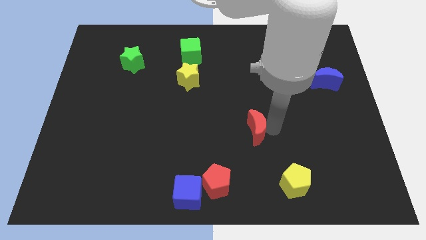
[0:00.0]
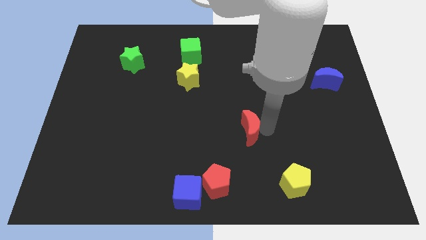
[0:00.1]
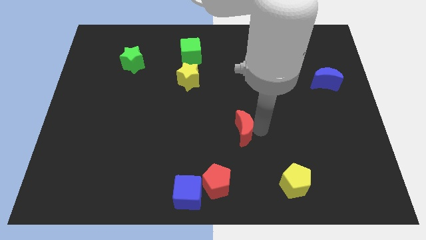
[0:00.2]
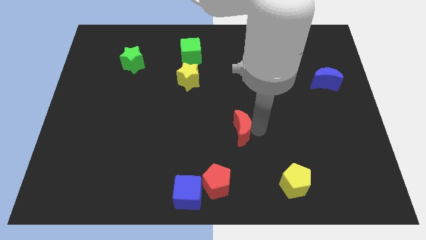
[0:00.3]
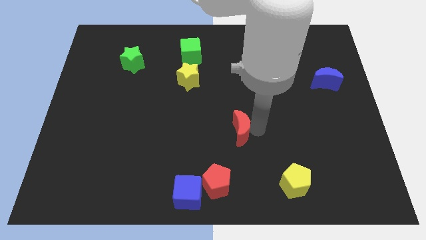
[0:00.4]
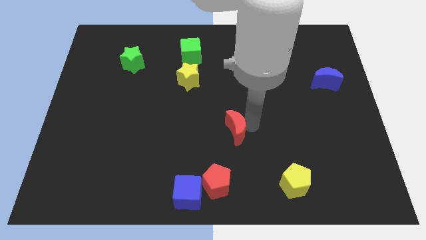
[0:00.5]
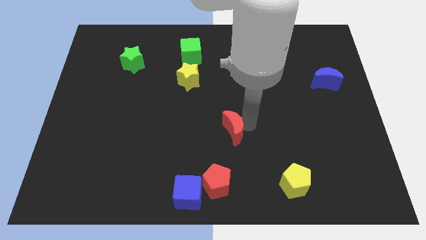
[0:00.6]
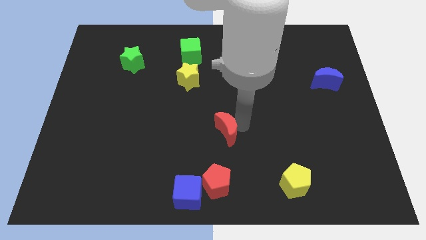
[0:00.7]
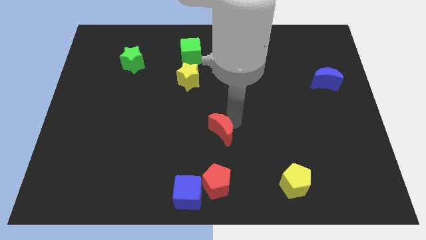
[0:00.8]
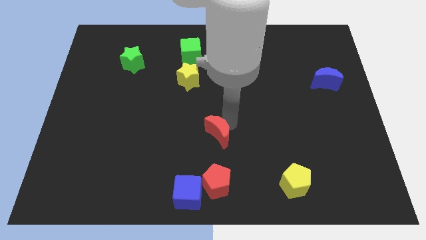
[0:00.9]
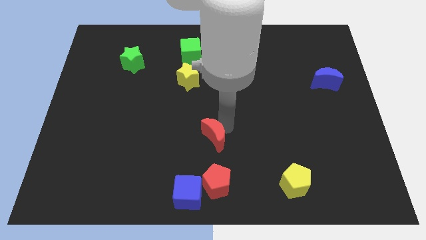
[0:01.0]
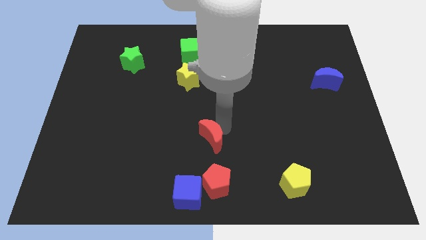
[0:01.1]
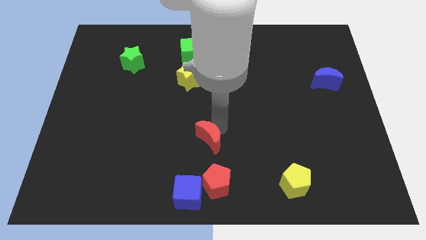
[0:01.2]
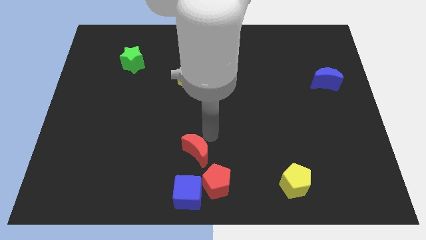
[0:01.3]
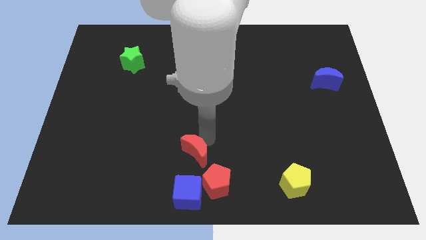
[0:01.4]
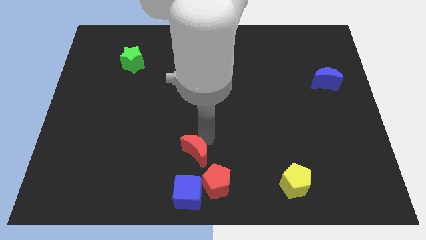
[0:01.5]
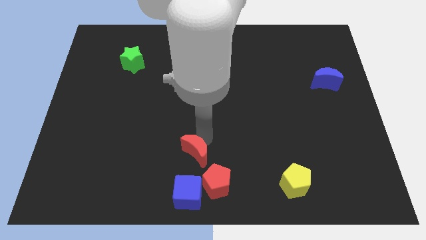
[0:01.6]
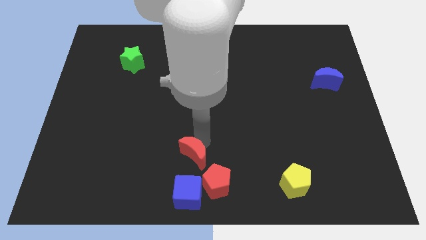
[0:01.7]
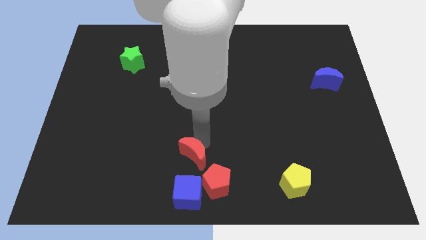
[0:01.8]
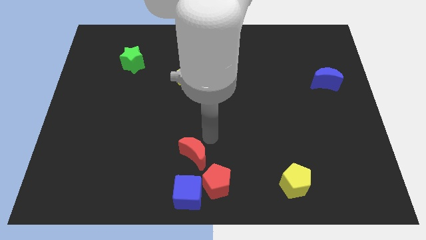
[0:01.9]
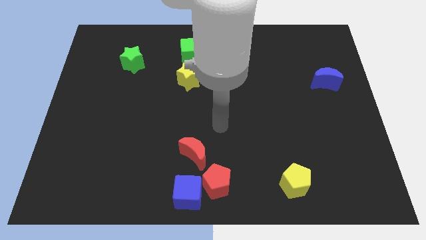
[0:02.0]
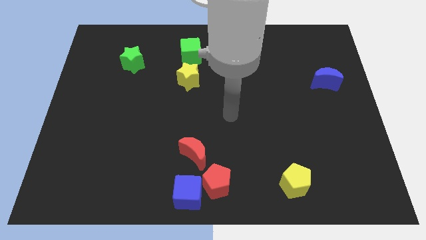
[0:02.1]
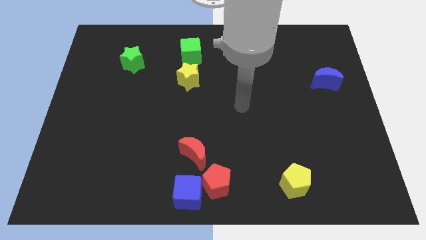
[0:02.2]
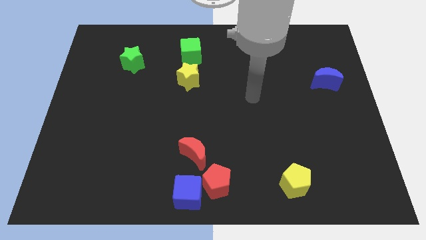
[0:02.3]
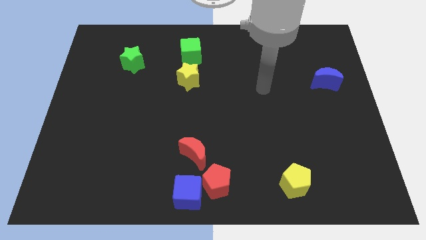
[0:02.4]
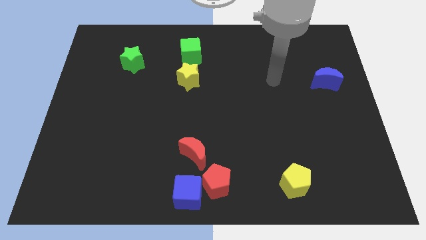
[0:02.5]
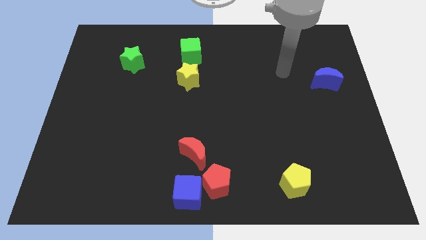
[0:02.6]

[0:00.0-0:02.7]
place the red crescent above the blue cube

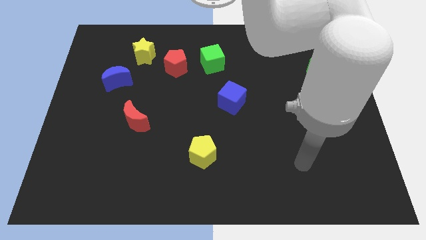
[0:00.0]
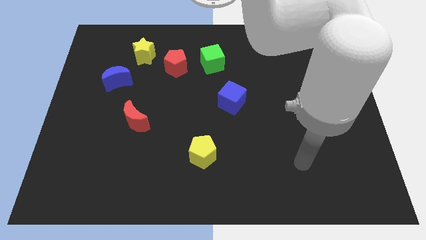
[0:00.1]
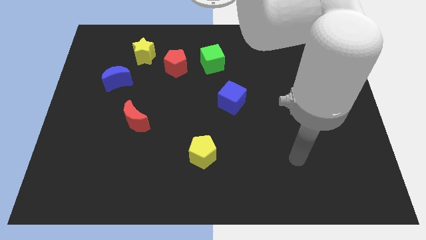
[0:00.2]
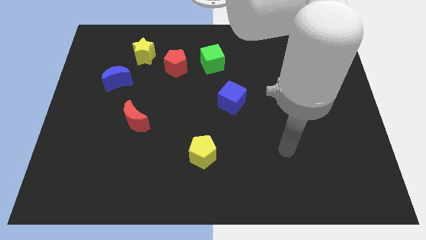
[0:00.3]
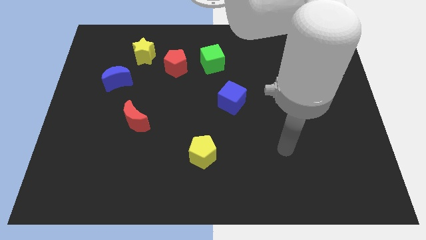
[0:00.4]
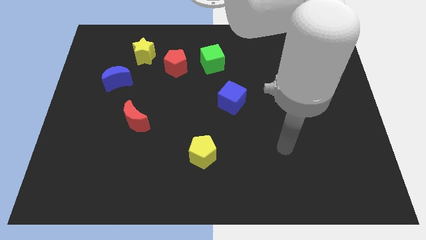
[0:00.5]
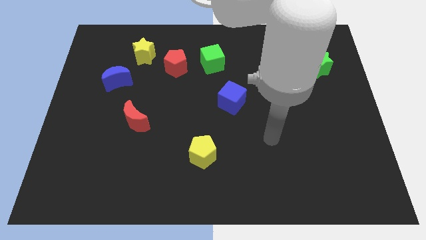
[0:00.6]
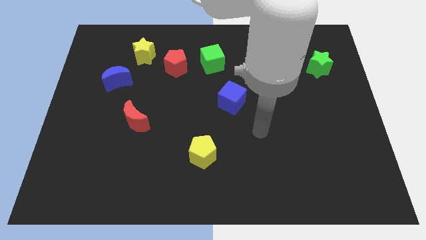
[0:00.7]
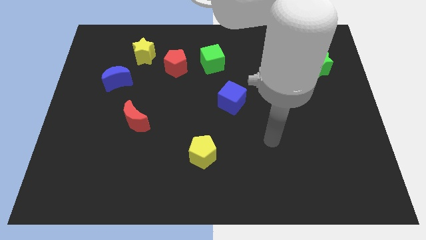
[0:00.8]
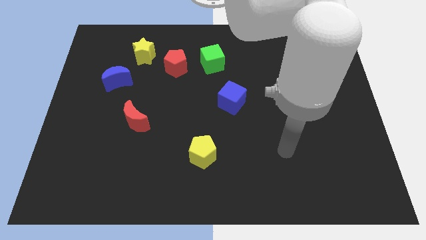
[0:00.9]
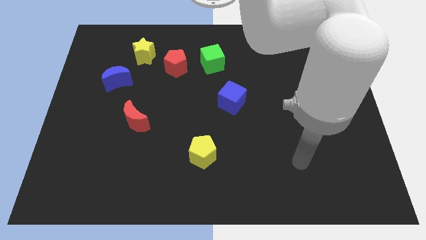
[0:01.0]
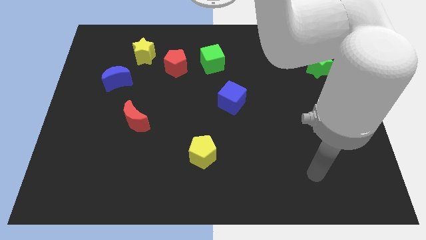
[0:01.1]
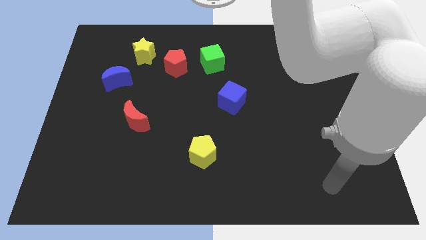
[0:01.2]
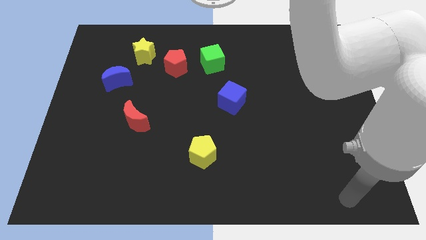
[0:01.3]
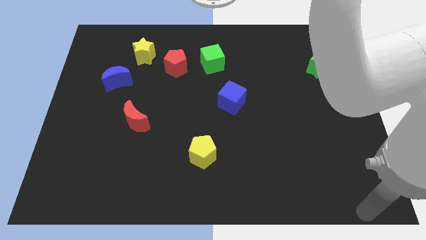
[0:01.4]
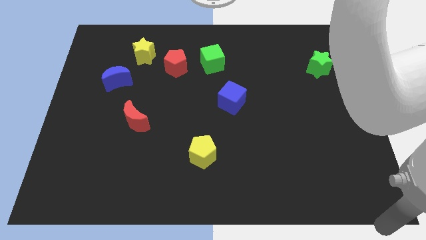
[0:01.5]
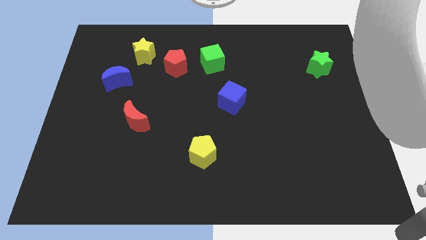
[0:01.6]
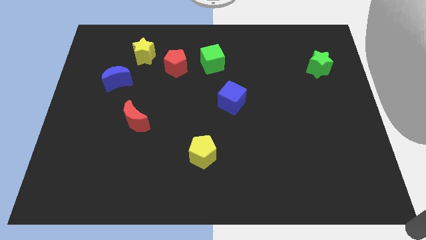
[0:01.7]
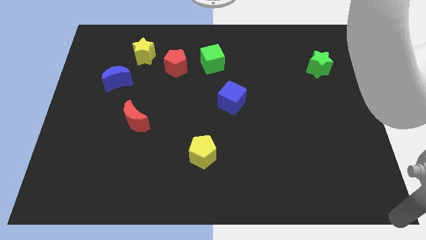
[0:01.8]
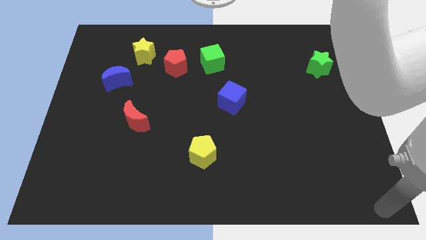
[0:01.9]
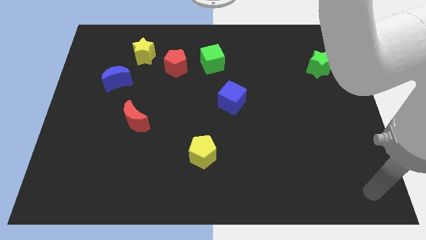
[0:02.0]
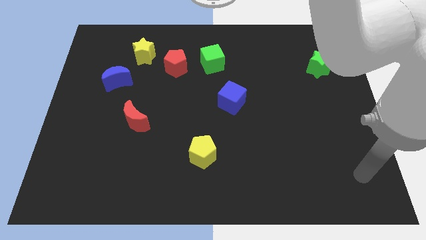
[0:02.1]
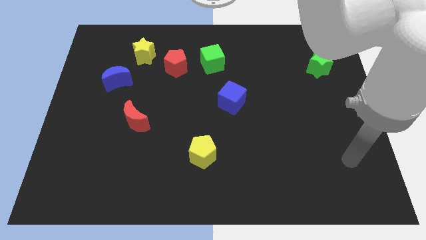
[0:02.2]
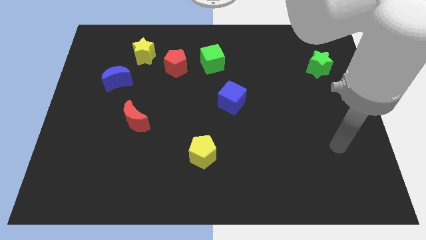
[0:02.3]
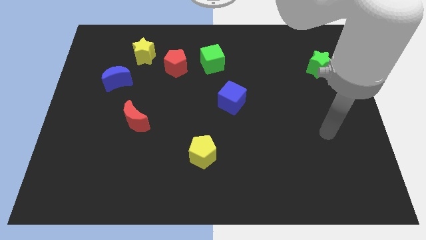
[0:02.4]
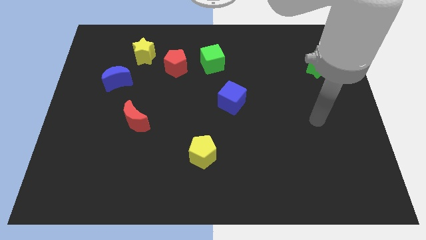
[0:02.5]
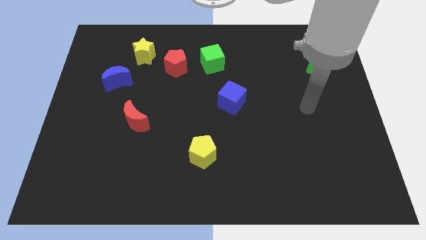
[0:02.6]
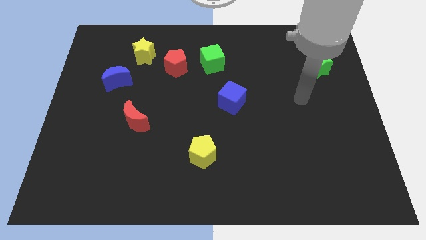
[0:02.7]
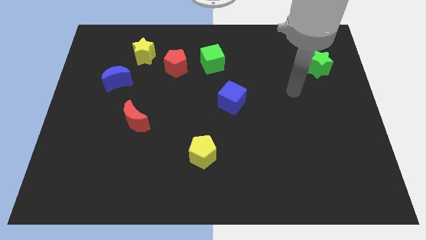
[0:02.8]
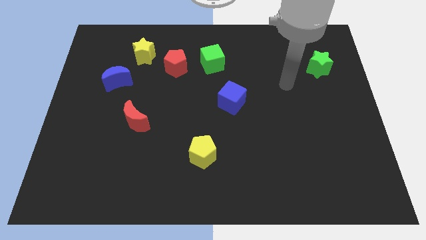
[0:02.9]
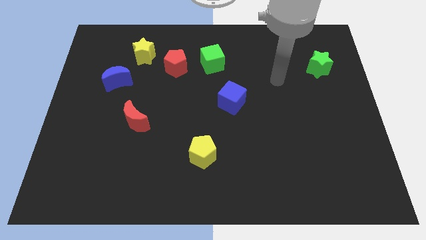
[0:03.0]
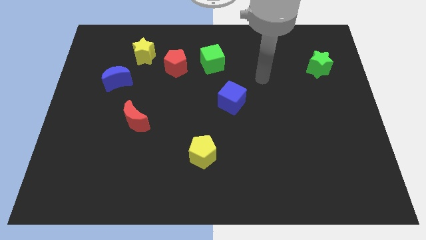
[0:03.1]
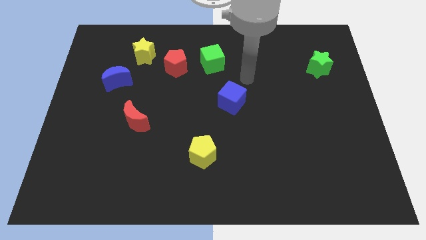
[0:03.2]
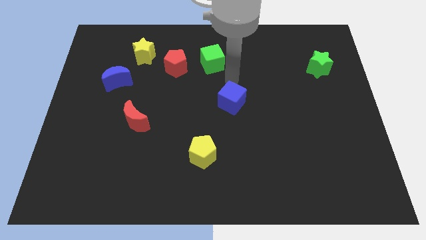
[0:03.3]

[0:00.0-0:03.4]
move your arm to the top side of the blue cube

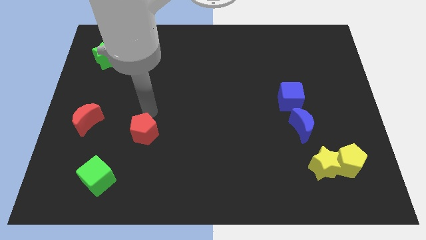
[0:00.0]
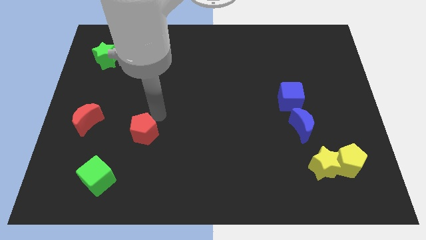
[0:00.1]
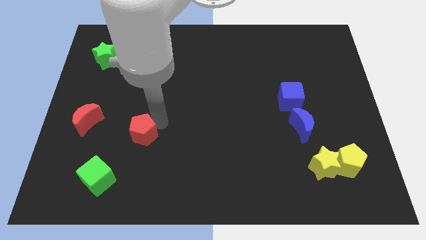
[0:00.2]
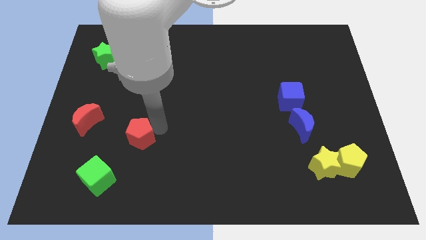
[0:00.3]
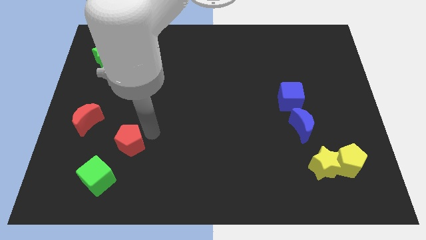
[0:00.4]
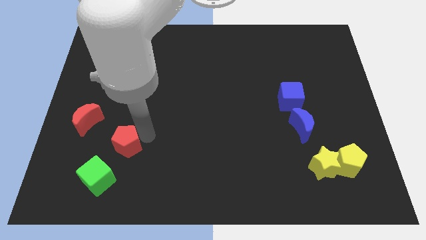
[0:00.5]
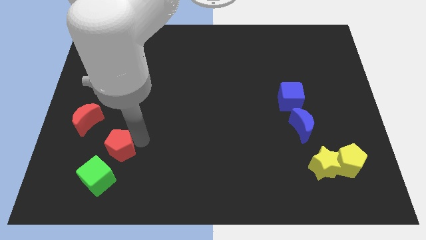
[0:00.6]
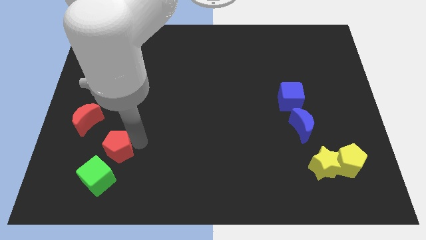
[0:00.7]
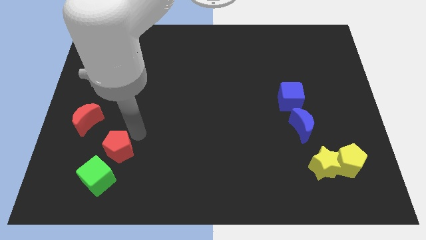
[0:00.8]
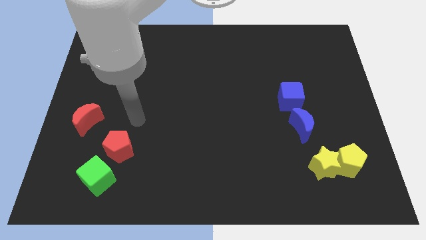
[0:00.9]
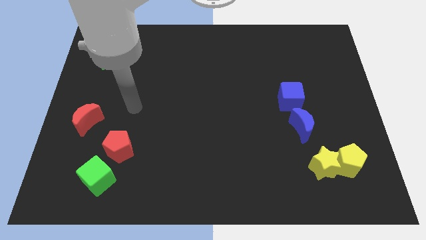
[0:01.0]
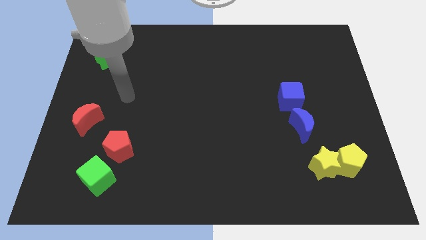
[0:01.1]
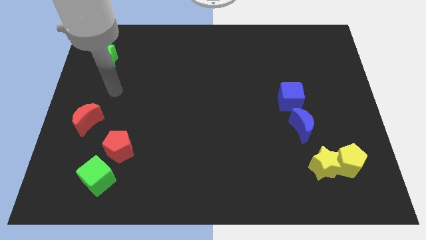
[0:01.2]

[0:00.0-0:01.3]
place the red pentagon above the green cube

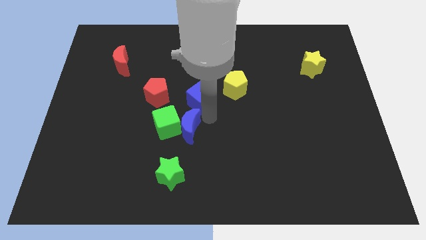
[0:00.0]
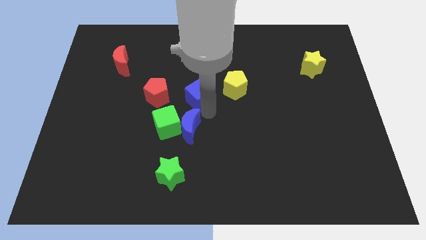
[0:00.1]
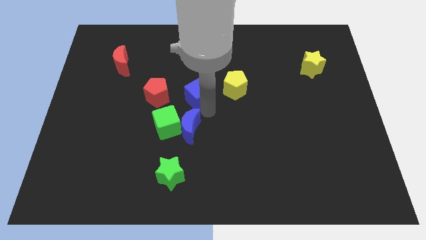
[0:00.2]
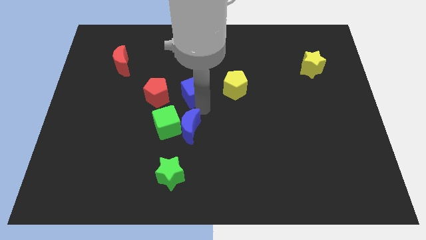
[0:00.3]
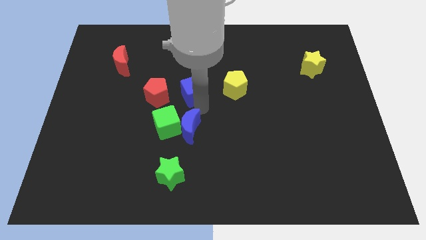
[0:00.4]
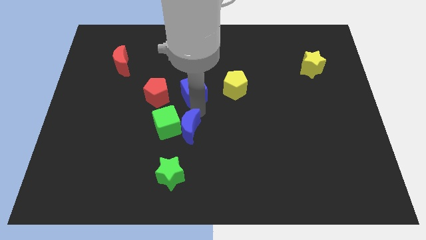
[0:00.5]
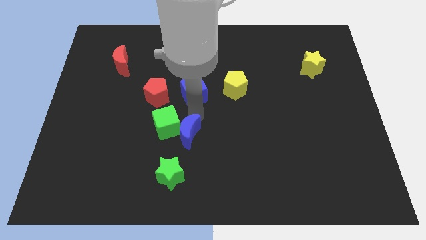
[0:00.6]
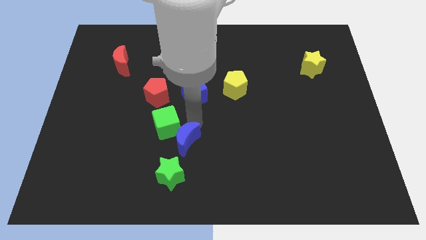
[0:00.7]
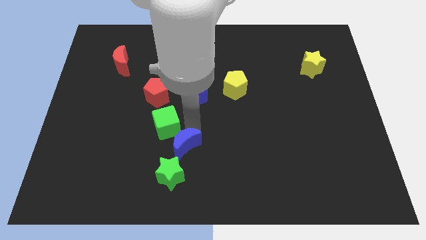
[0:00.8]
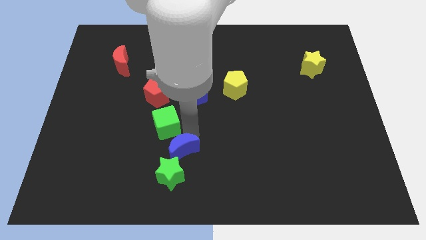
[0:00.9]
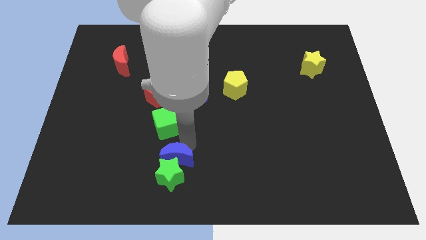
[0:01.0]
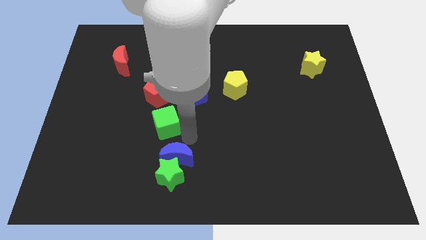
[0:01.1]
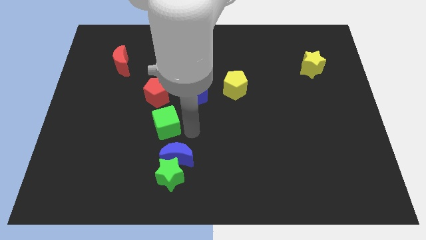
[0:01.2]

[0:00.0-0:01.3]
move blue moon above the green star

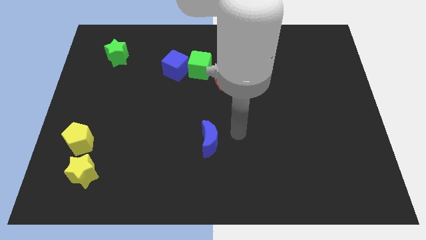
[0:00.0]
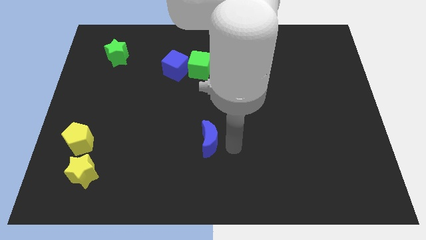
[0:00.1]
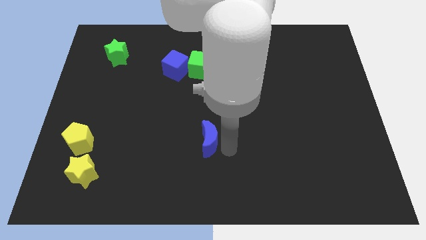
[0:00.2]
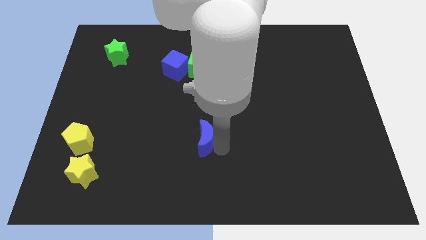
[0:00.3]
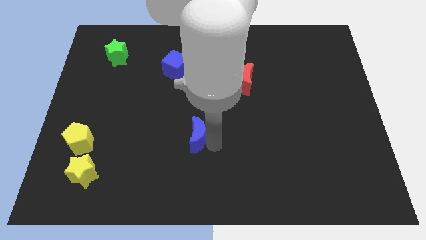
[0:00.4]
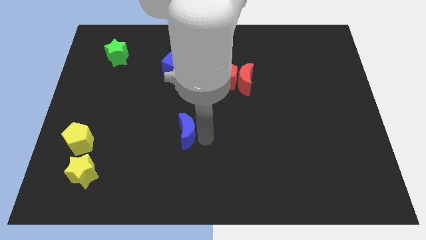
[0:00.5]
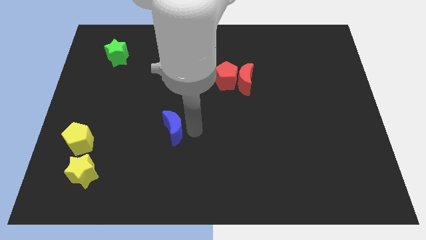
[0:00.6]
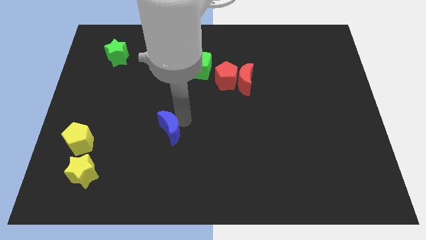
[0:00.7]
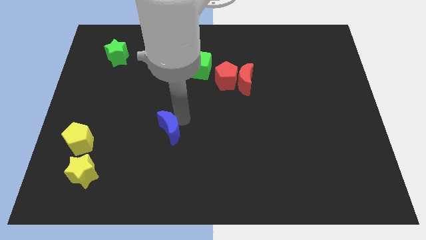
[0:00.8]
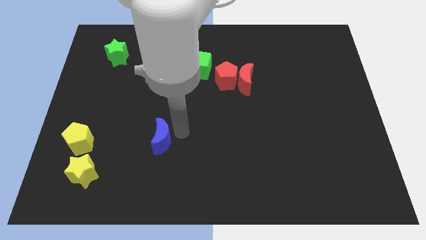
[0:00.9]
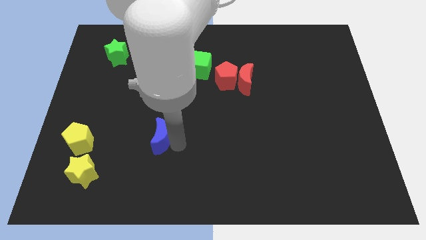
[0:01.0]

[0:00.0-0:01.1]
place blue moon to the bottom of blue cube
